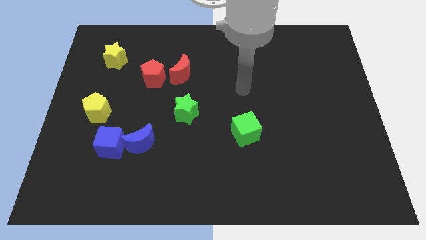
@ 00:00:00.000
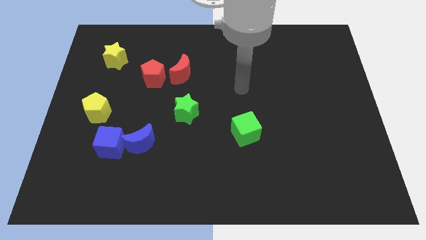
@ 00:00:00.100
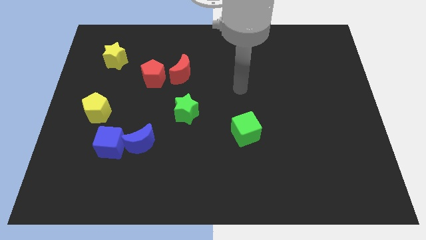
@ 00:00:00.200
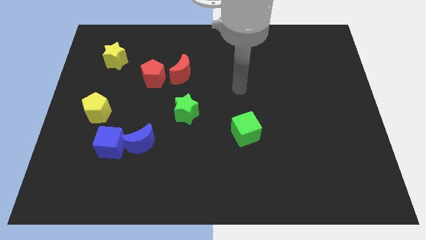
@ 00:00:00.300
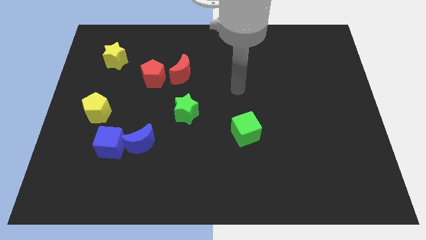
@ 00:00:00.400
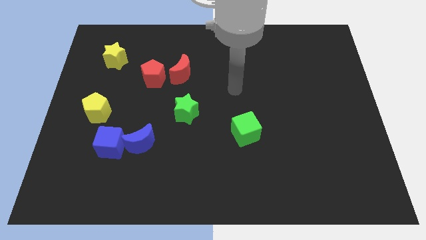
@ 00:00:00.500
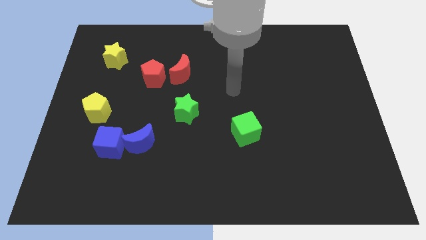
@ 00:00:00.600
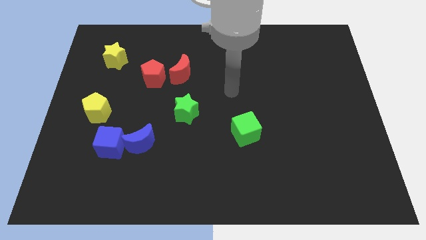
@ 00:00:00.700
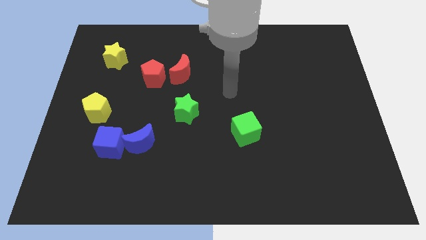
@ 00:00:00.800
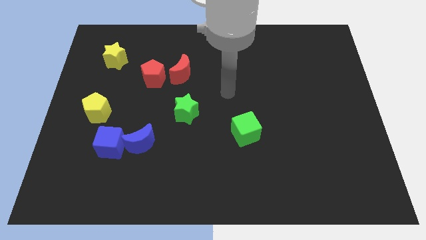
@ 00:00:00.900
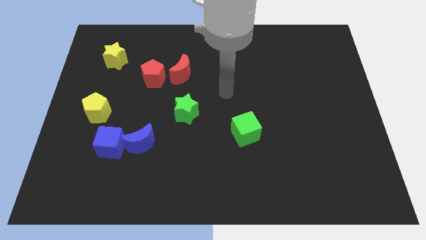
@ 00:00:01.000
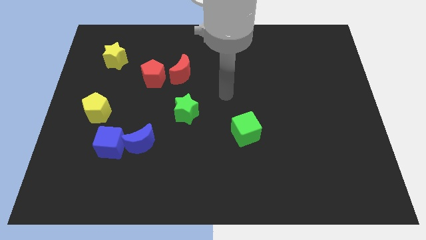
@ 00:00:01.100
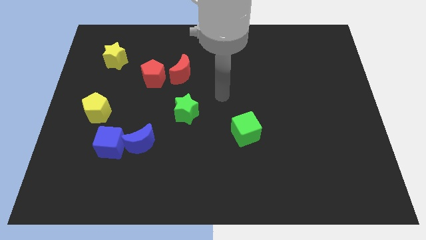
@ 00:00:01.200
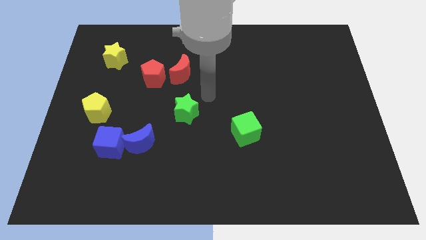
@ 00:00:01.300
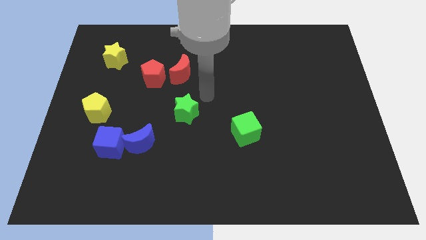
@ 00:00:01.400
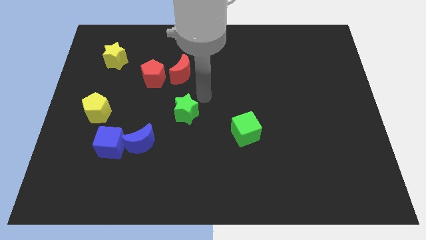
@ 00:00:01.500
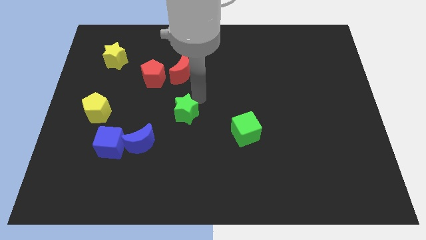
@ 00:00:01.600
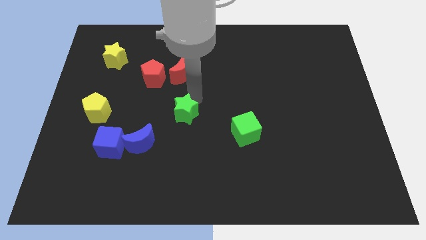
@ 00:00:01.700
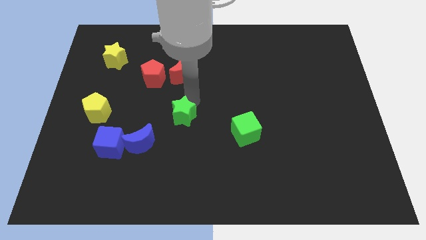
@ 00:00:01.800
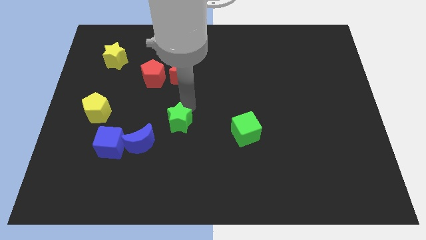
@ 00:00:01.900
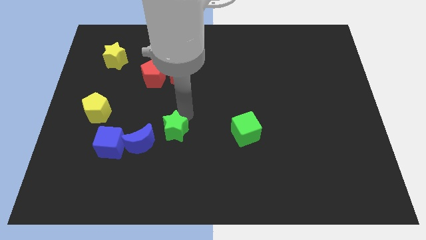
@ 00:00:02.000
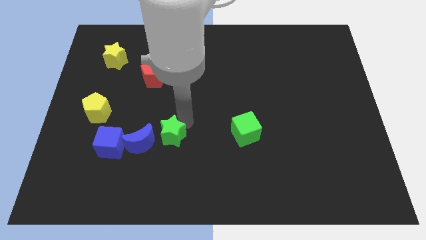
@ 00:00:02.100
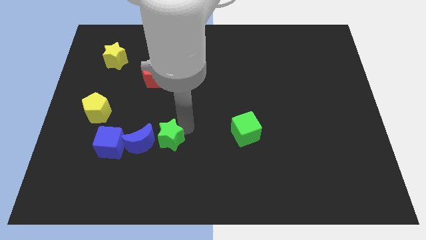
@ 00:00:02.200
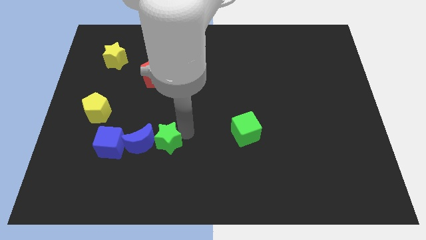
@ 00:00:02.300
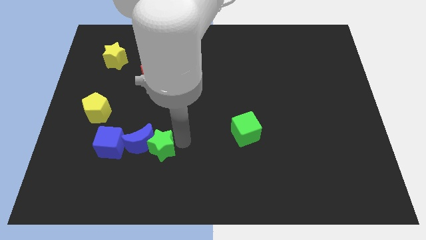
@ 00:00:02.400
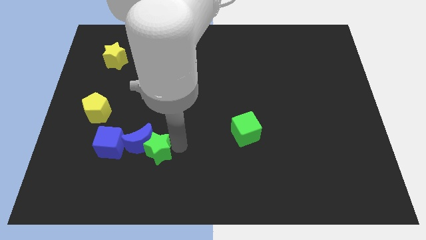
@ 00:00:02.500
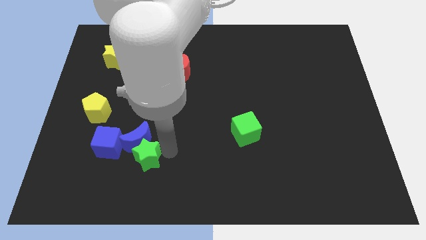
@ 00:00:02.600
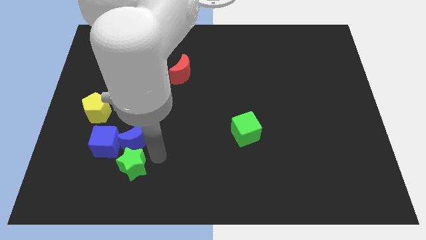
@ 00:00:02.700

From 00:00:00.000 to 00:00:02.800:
push green star below blue crescent

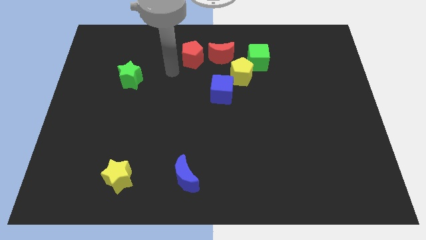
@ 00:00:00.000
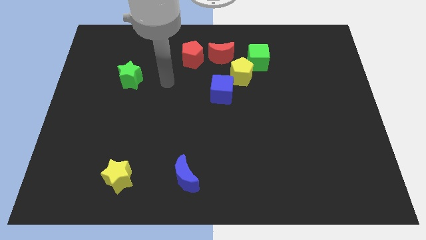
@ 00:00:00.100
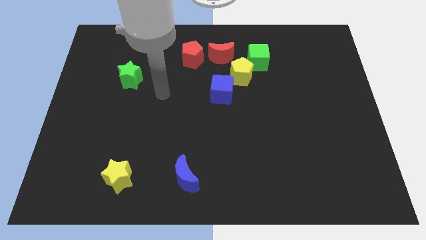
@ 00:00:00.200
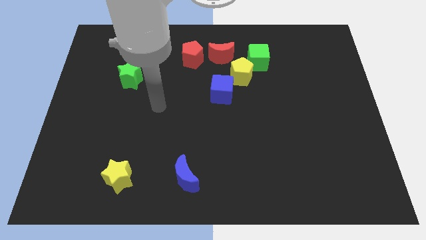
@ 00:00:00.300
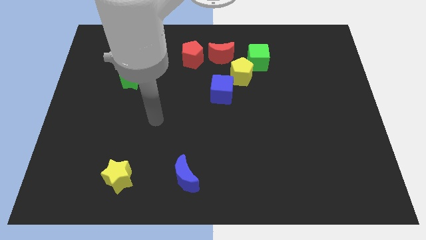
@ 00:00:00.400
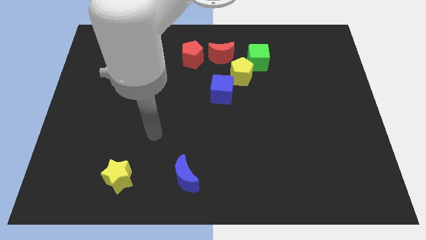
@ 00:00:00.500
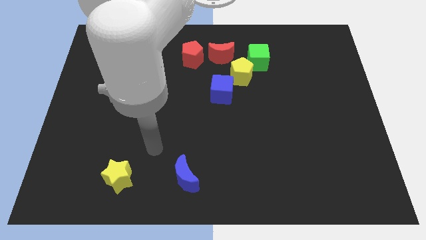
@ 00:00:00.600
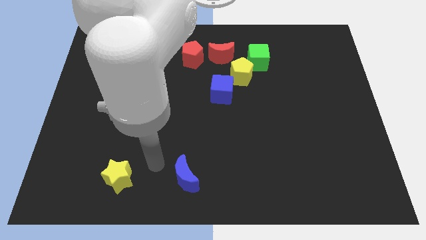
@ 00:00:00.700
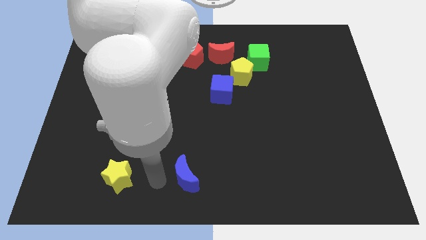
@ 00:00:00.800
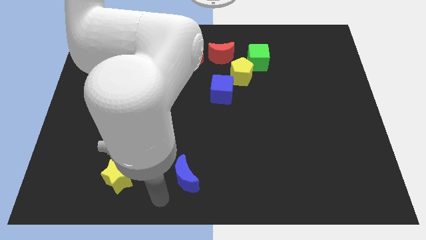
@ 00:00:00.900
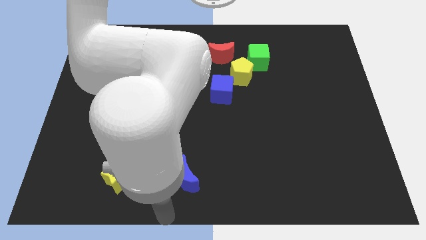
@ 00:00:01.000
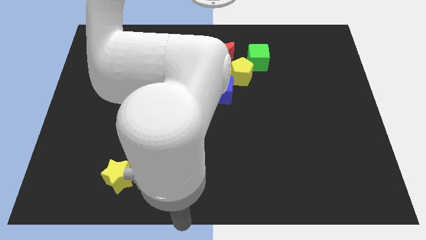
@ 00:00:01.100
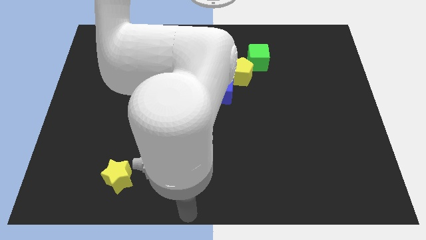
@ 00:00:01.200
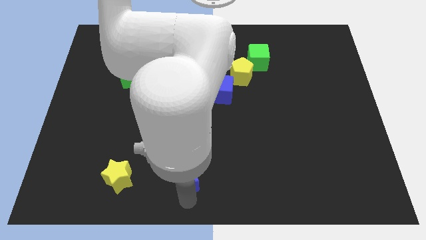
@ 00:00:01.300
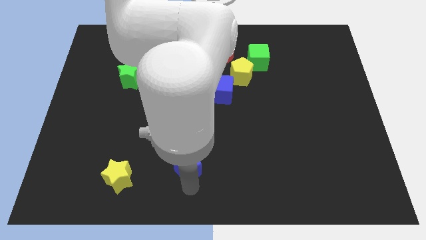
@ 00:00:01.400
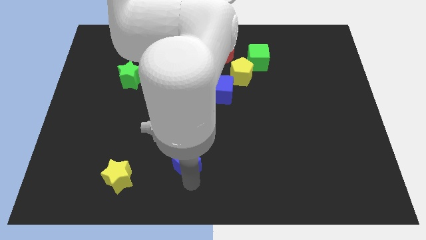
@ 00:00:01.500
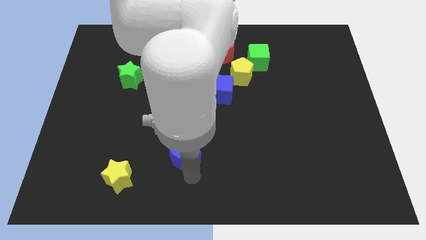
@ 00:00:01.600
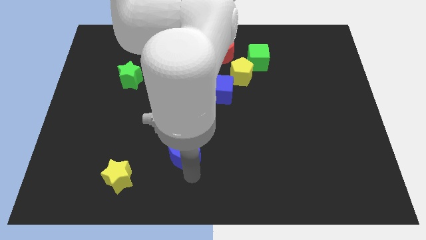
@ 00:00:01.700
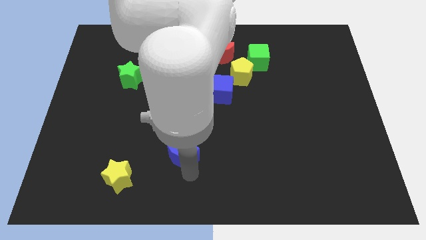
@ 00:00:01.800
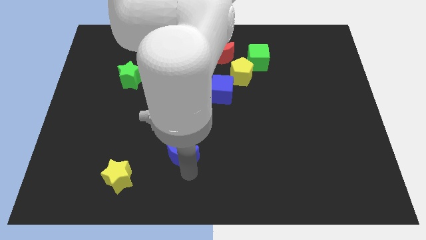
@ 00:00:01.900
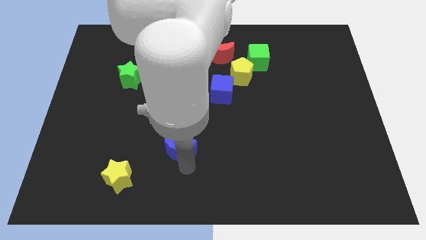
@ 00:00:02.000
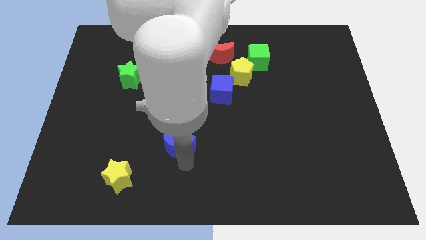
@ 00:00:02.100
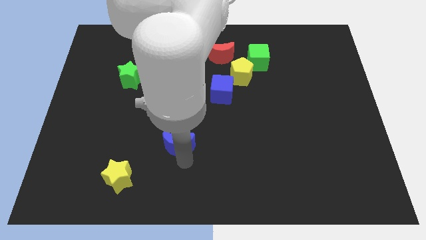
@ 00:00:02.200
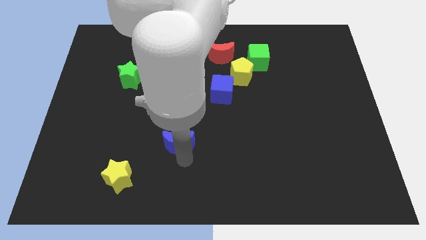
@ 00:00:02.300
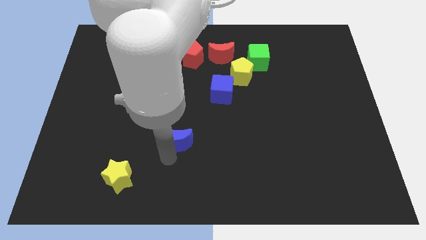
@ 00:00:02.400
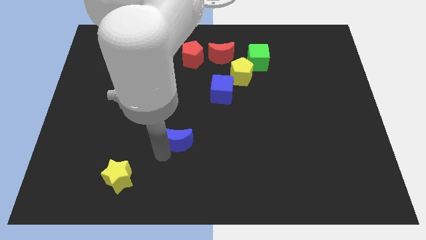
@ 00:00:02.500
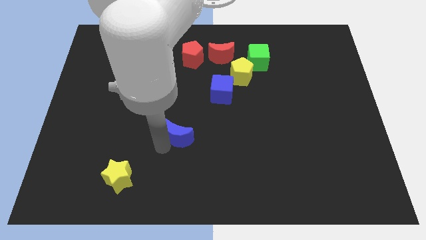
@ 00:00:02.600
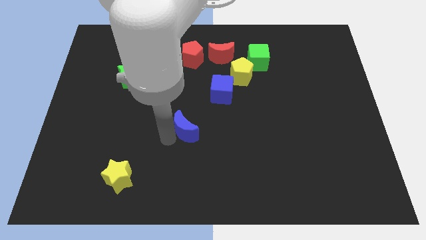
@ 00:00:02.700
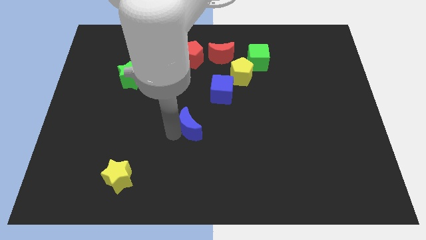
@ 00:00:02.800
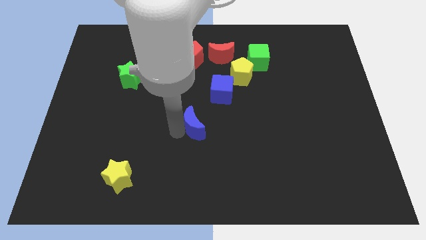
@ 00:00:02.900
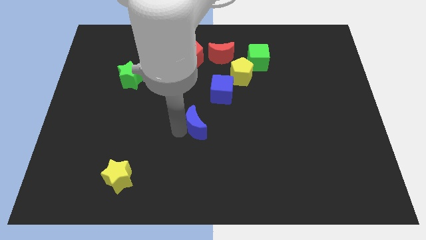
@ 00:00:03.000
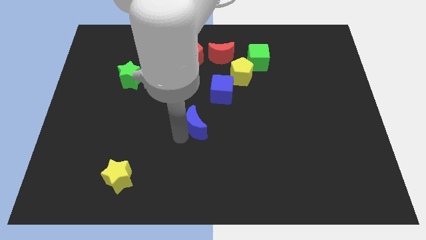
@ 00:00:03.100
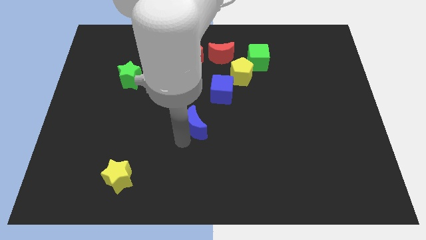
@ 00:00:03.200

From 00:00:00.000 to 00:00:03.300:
move the blue crescent to the bottom left of the blue cube

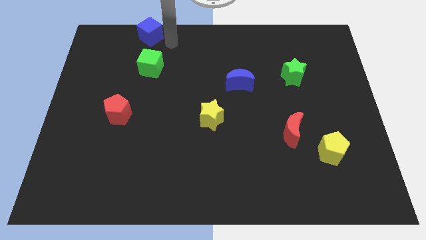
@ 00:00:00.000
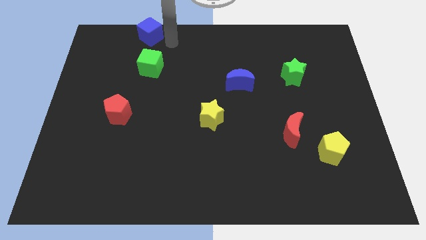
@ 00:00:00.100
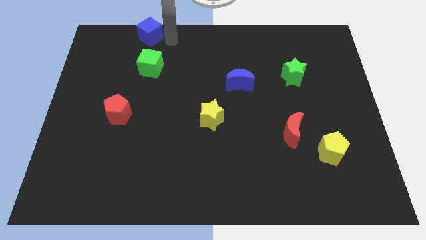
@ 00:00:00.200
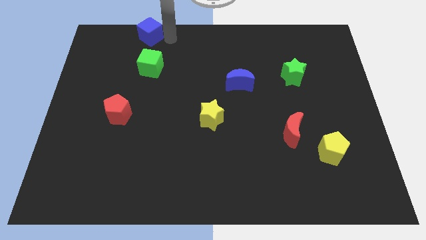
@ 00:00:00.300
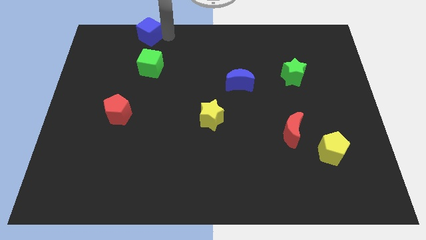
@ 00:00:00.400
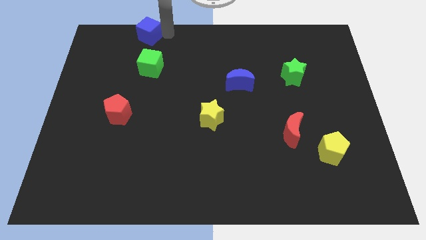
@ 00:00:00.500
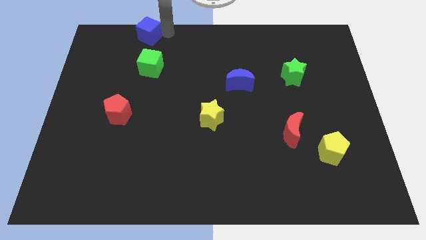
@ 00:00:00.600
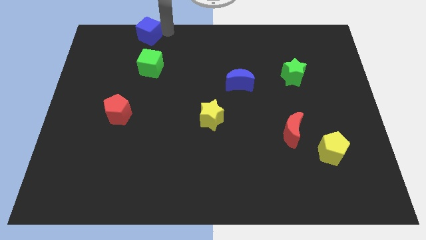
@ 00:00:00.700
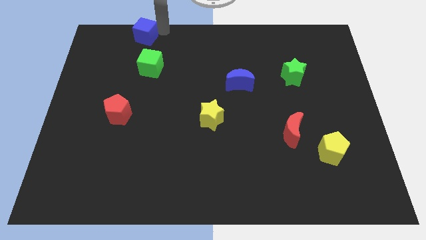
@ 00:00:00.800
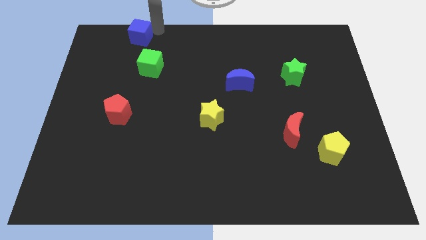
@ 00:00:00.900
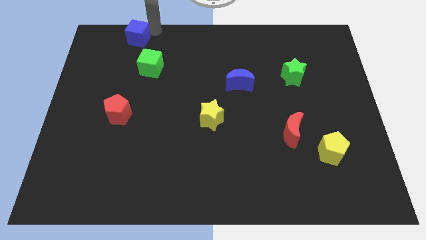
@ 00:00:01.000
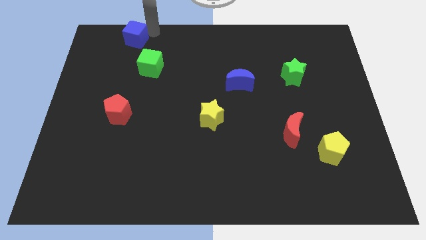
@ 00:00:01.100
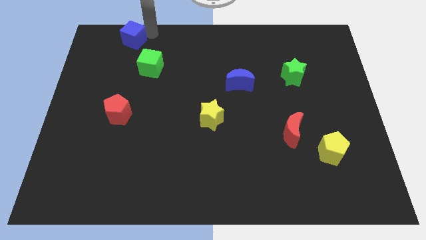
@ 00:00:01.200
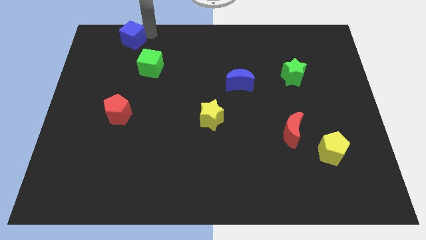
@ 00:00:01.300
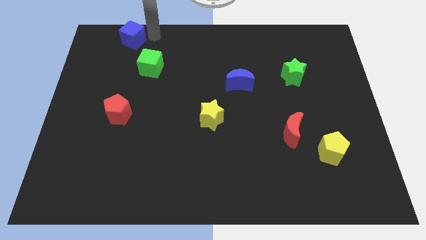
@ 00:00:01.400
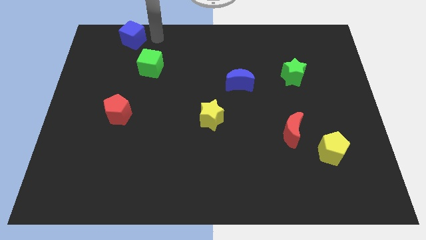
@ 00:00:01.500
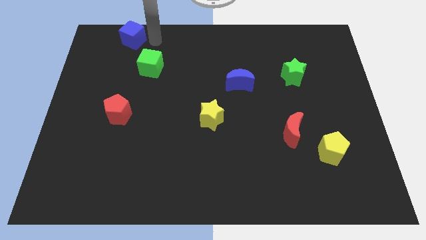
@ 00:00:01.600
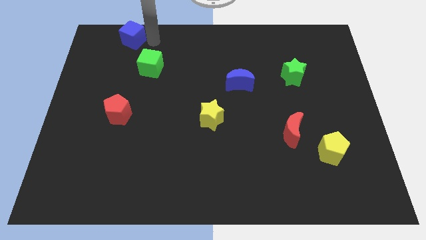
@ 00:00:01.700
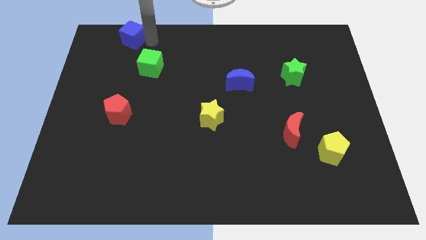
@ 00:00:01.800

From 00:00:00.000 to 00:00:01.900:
push the blue cube slightly to the left

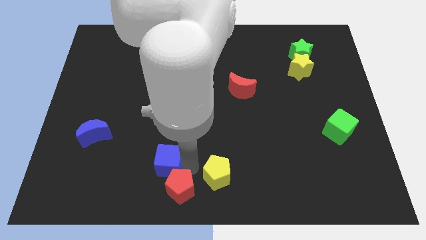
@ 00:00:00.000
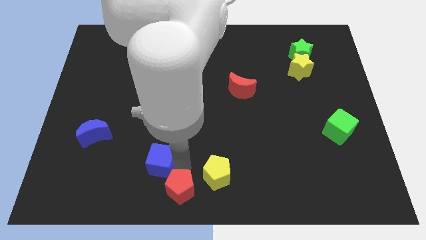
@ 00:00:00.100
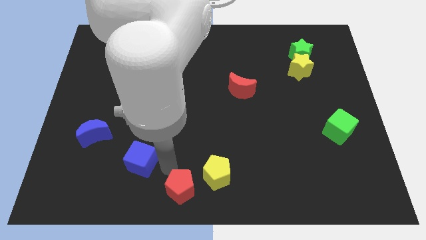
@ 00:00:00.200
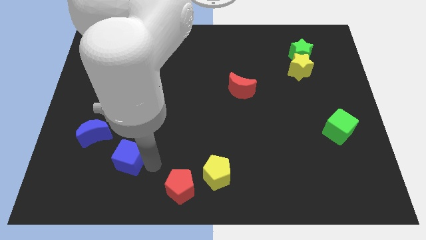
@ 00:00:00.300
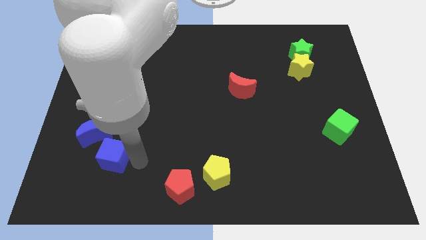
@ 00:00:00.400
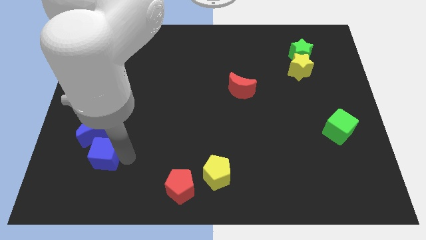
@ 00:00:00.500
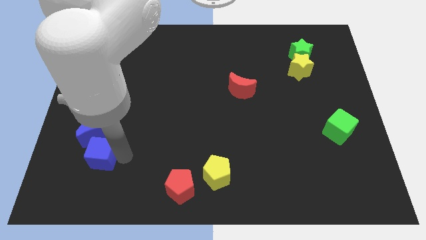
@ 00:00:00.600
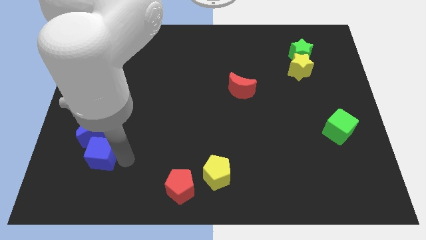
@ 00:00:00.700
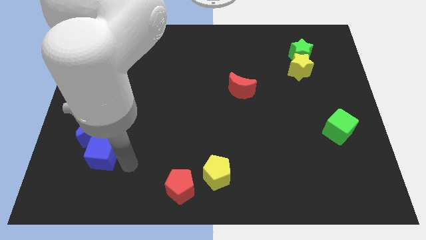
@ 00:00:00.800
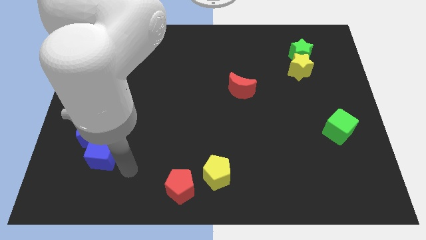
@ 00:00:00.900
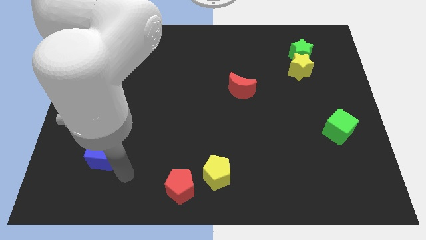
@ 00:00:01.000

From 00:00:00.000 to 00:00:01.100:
move the blue cube to the bottom of the blue crescent
